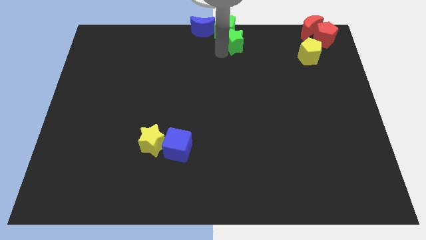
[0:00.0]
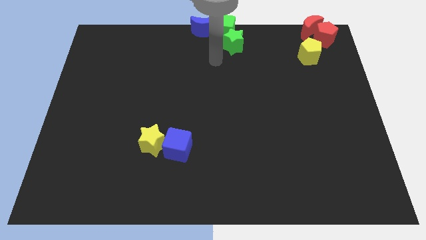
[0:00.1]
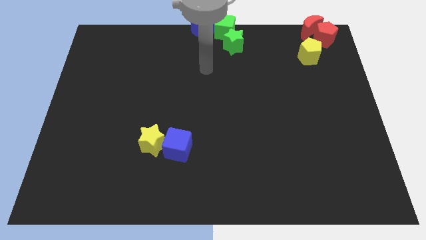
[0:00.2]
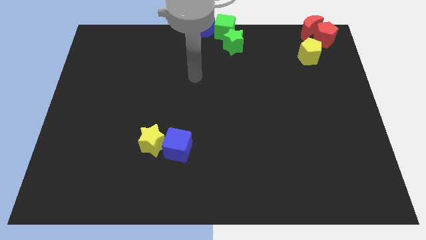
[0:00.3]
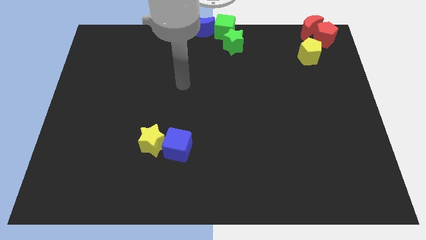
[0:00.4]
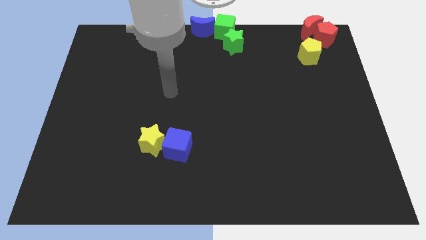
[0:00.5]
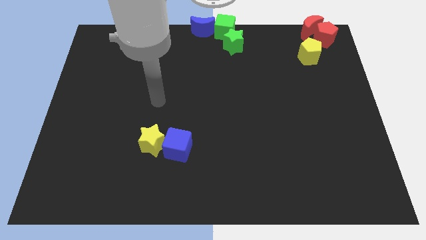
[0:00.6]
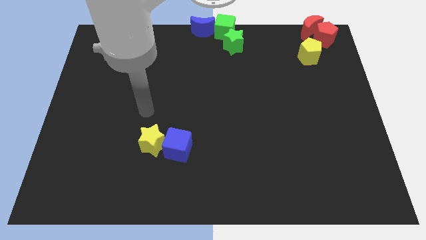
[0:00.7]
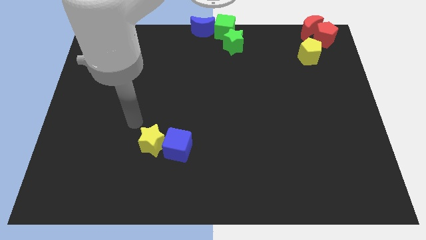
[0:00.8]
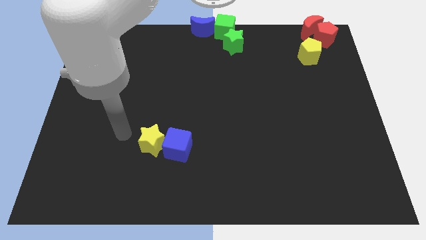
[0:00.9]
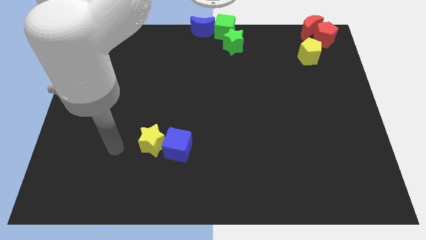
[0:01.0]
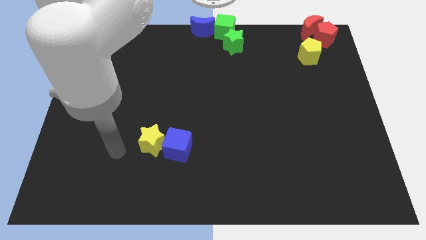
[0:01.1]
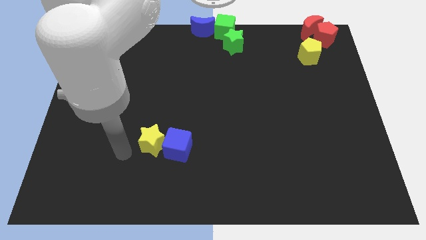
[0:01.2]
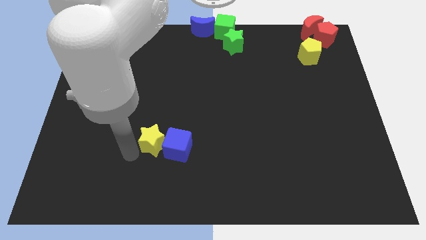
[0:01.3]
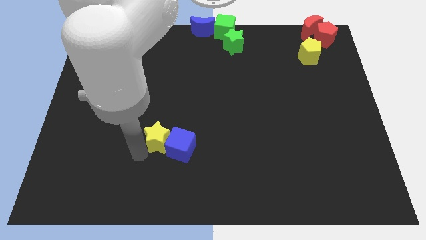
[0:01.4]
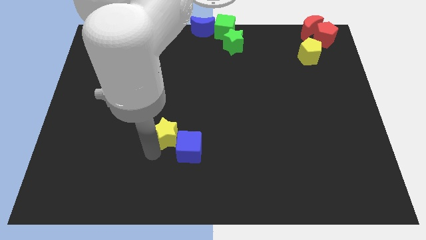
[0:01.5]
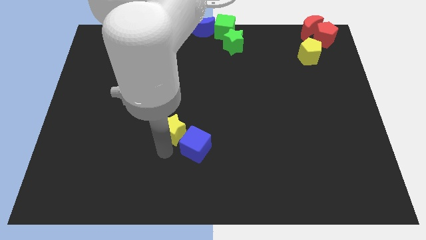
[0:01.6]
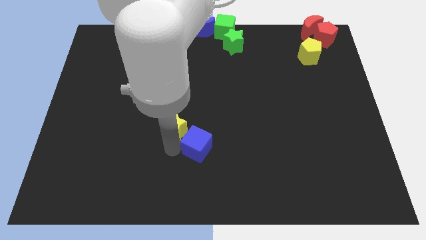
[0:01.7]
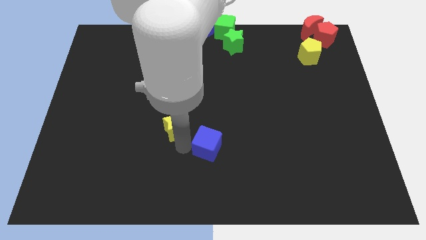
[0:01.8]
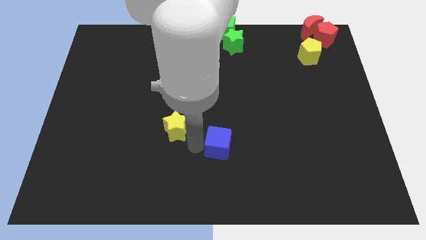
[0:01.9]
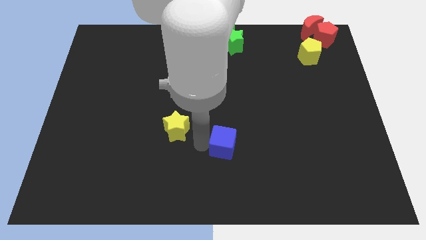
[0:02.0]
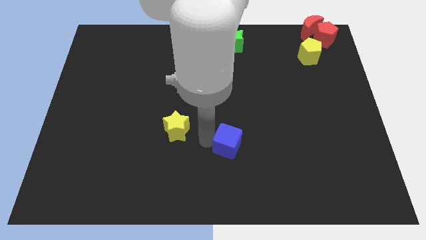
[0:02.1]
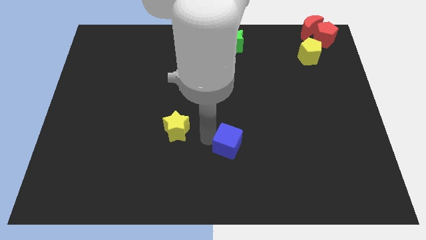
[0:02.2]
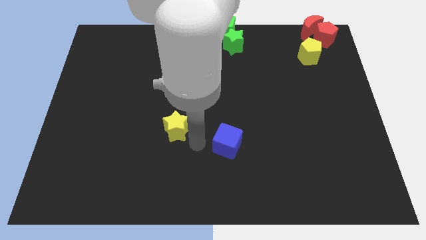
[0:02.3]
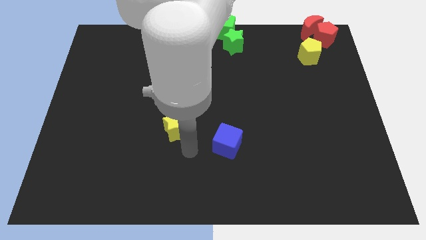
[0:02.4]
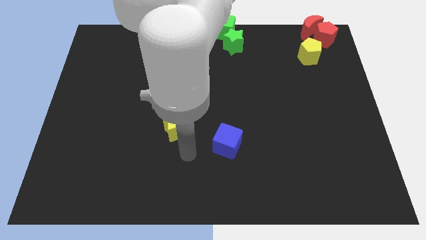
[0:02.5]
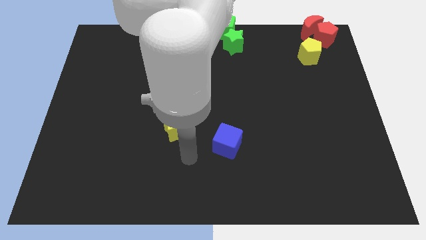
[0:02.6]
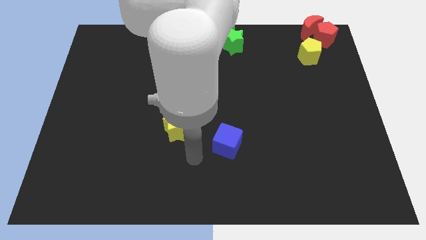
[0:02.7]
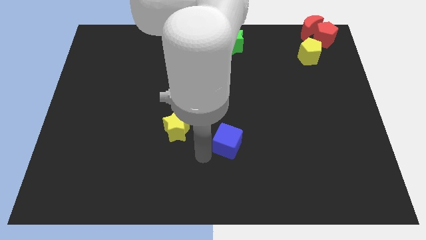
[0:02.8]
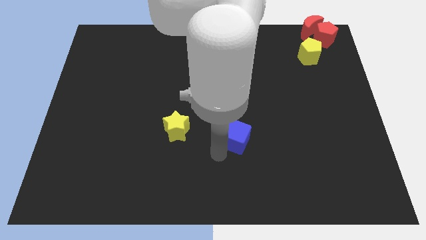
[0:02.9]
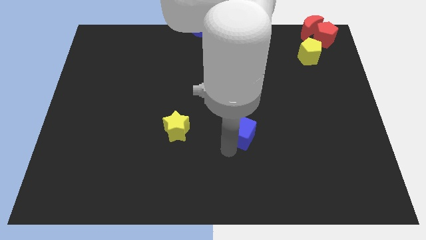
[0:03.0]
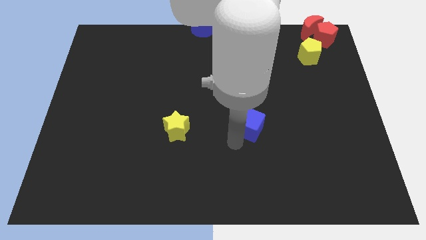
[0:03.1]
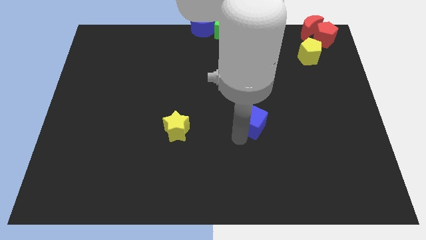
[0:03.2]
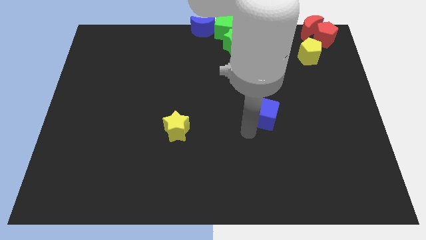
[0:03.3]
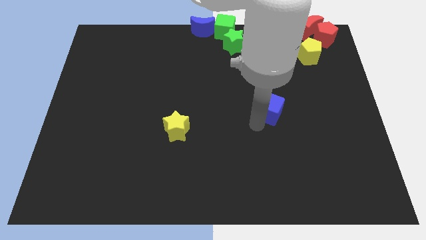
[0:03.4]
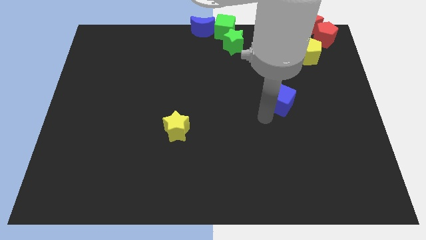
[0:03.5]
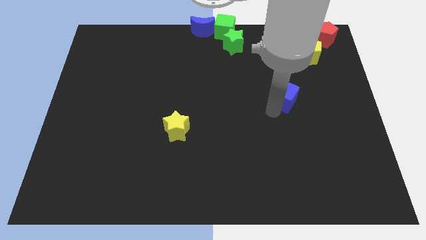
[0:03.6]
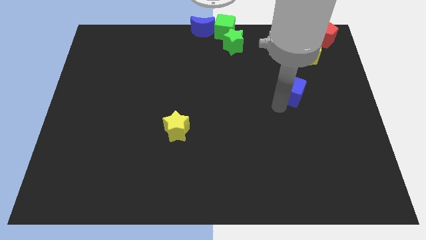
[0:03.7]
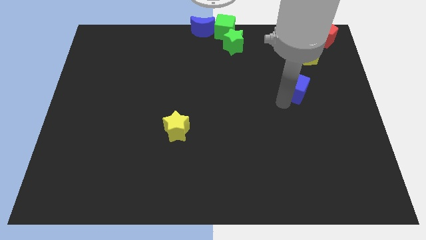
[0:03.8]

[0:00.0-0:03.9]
separate blue cube from yellow star

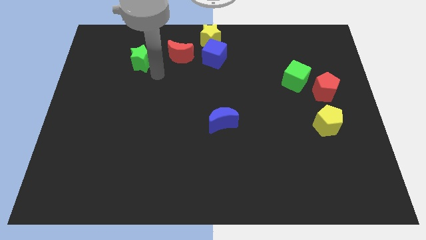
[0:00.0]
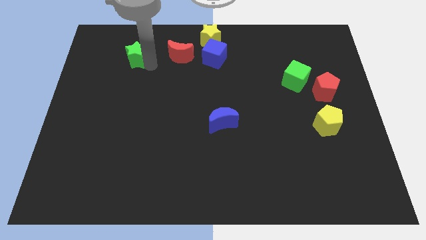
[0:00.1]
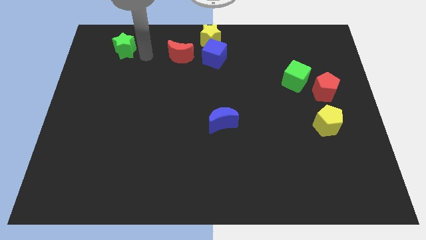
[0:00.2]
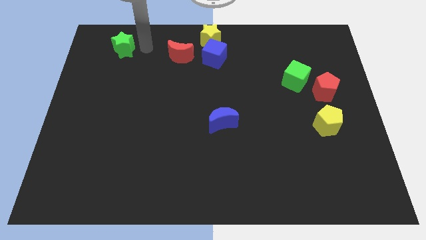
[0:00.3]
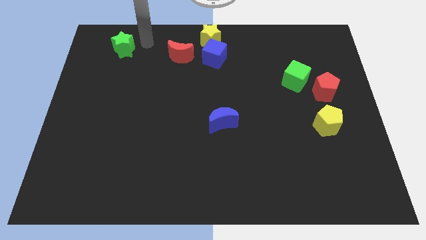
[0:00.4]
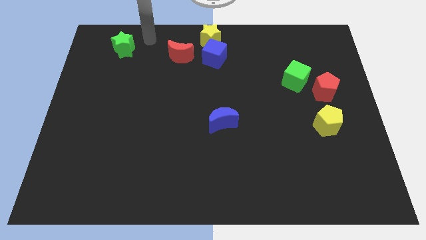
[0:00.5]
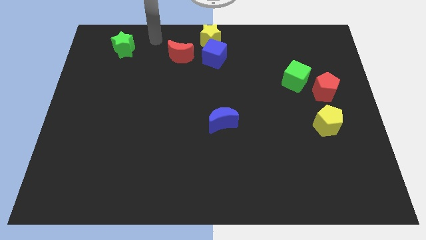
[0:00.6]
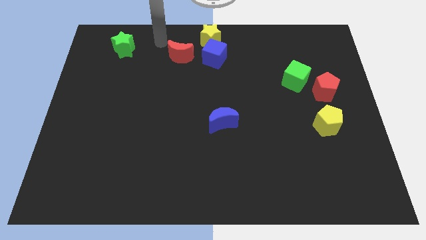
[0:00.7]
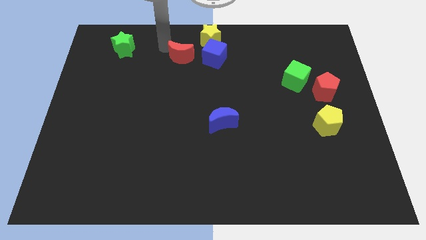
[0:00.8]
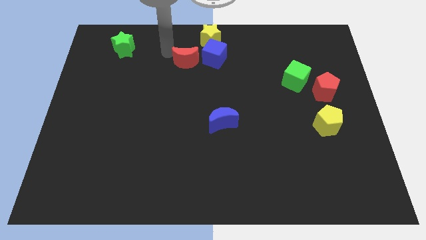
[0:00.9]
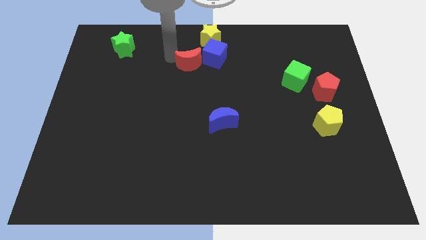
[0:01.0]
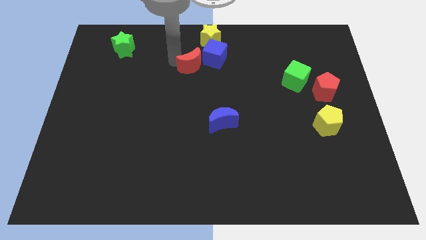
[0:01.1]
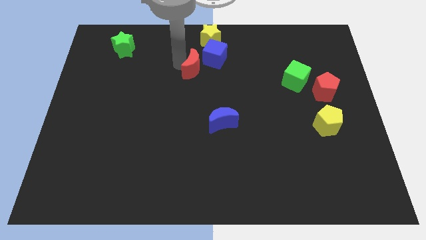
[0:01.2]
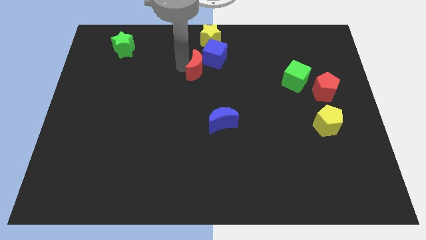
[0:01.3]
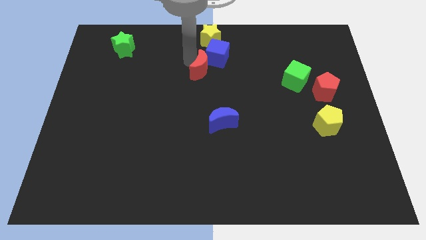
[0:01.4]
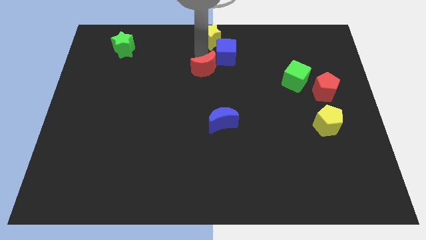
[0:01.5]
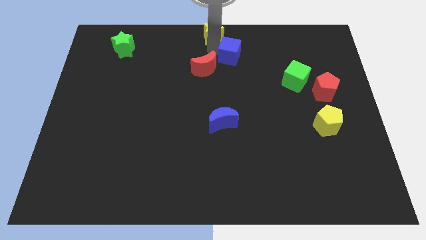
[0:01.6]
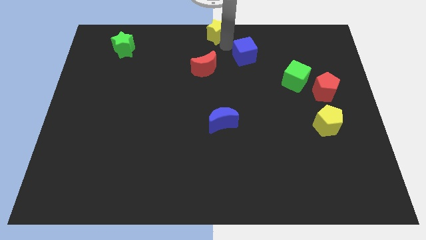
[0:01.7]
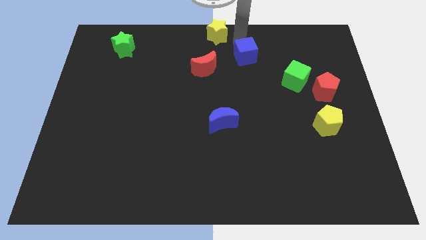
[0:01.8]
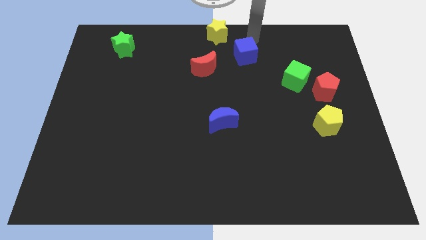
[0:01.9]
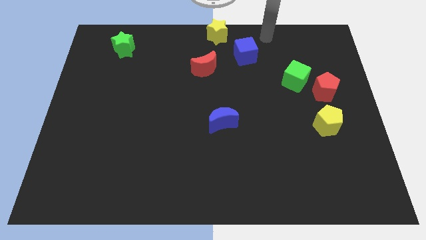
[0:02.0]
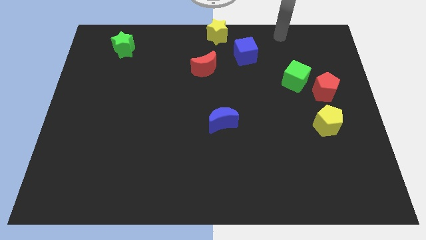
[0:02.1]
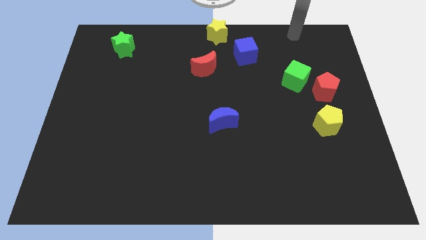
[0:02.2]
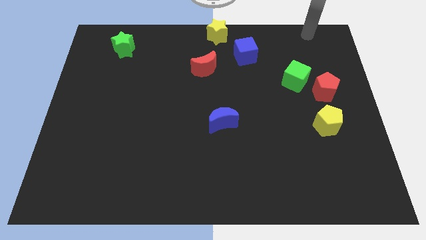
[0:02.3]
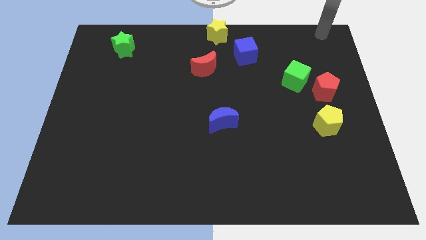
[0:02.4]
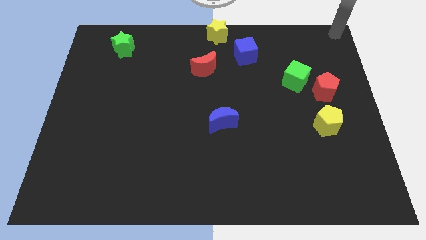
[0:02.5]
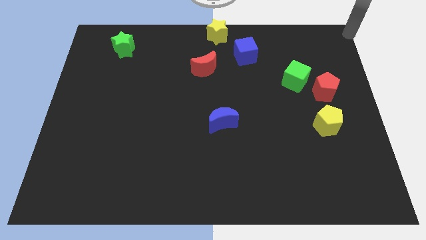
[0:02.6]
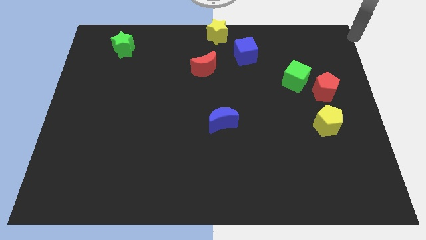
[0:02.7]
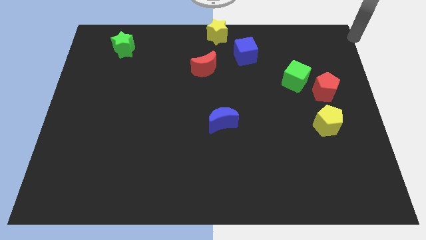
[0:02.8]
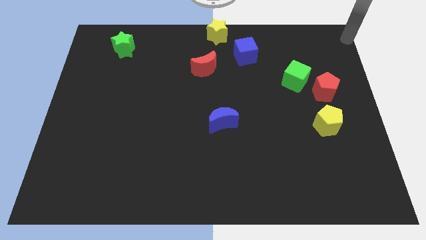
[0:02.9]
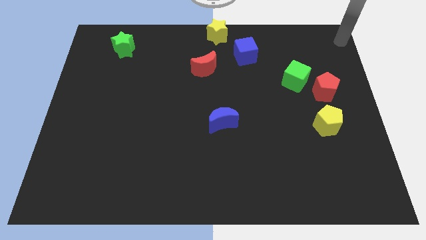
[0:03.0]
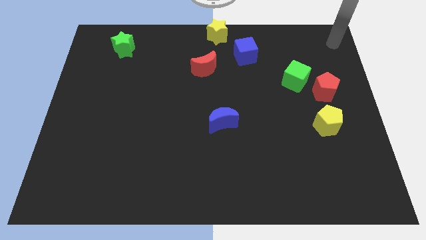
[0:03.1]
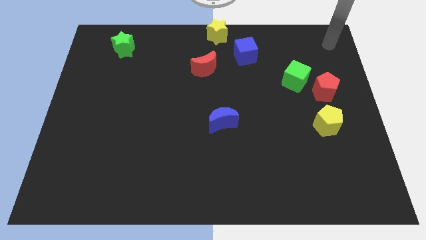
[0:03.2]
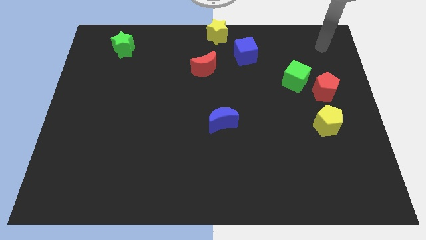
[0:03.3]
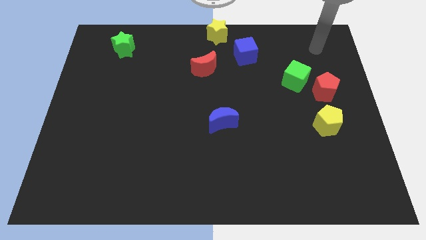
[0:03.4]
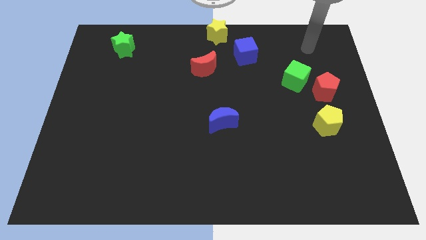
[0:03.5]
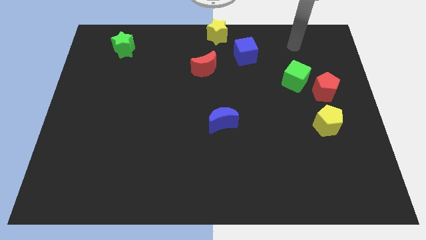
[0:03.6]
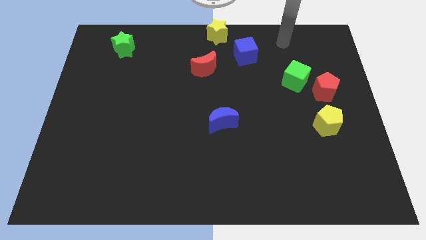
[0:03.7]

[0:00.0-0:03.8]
move the red crescent away from the blue cube

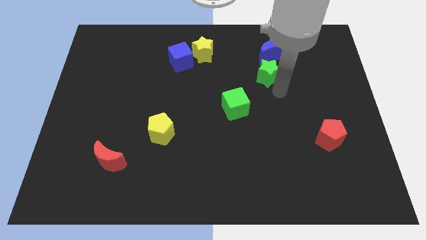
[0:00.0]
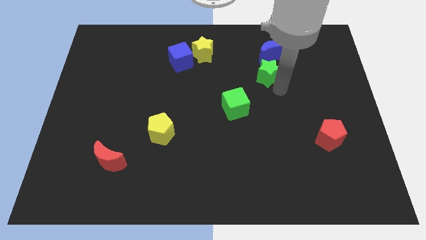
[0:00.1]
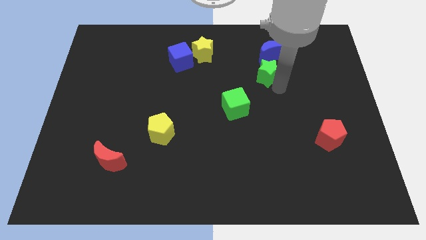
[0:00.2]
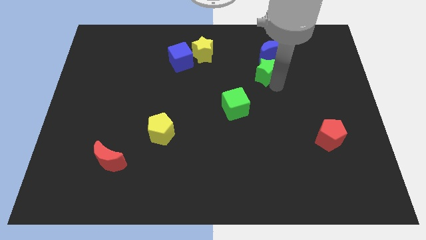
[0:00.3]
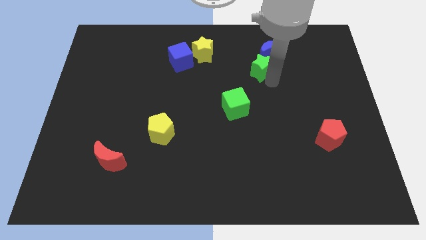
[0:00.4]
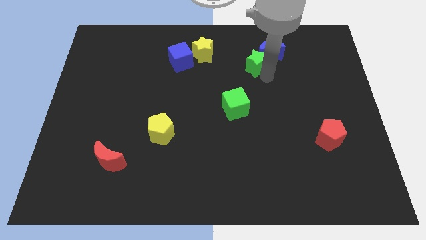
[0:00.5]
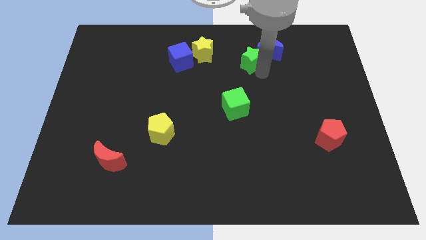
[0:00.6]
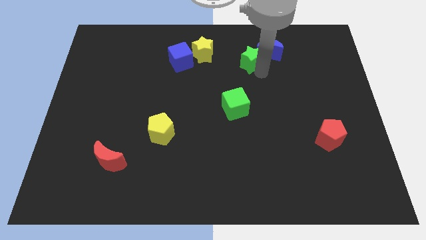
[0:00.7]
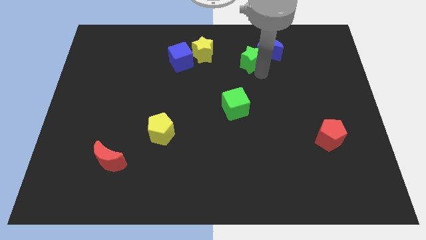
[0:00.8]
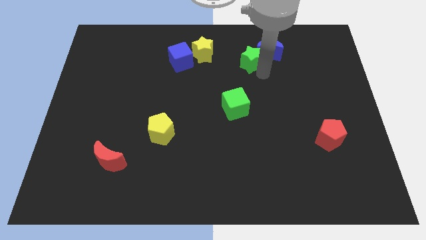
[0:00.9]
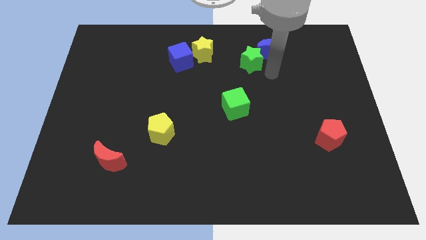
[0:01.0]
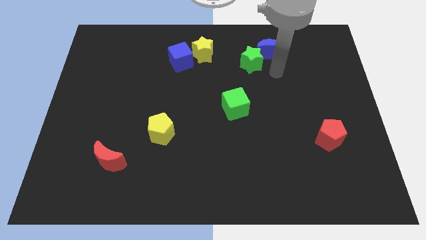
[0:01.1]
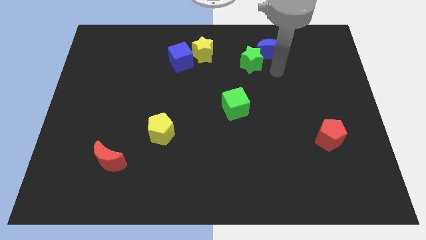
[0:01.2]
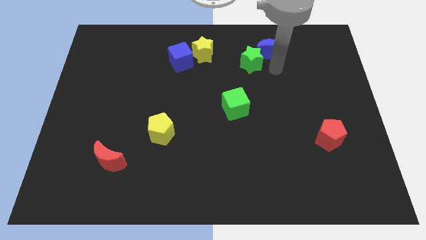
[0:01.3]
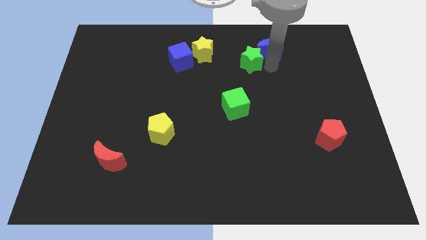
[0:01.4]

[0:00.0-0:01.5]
move green star into the blue moon
